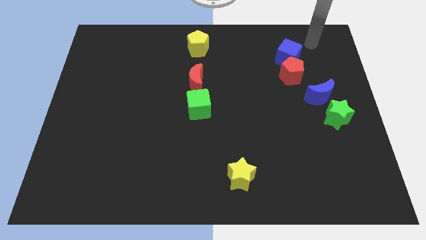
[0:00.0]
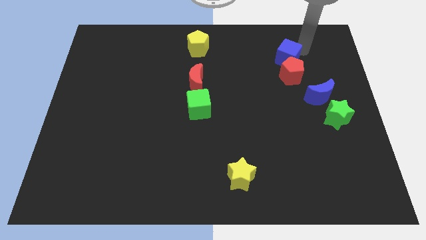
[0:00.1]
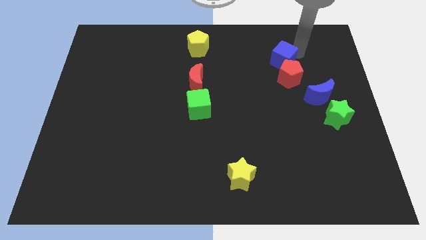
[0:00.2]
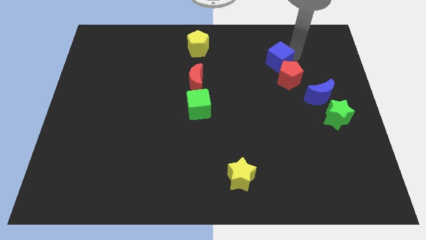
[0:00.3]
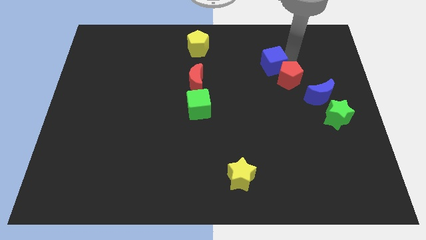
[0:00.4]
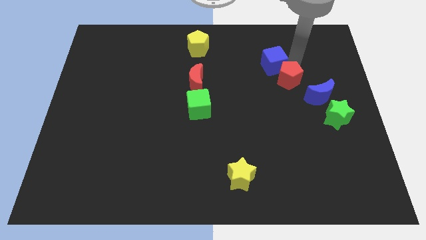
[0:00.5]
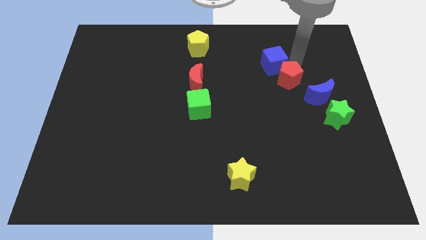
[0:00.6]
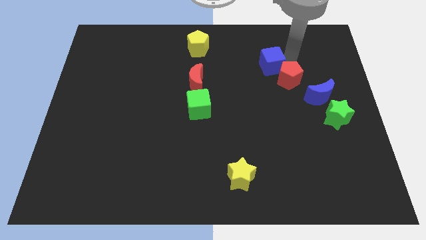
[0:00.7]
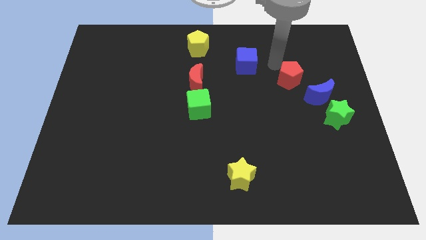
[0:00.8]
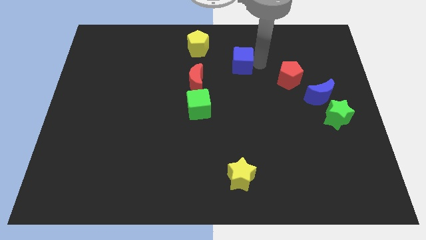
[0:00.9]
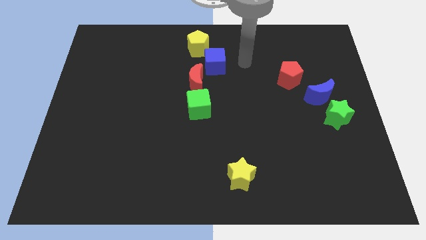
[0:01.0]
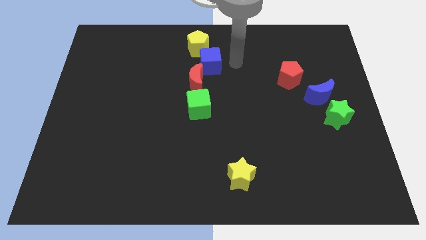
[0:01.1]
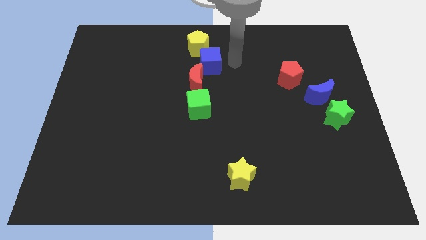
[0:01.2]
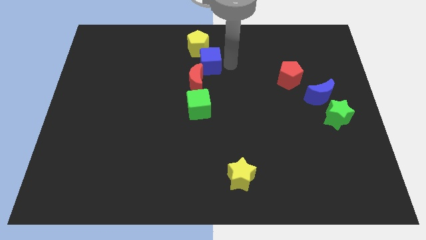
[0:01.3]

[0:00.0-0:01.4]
separate the blue cube from the red pentagon

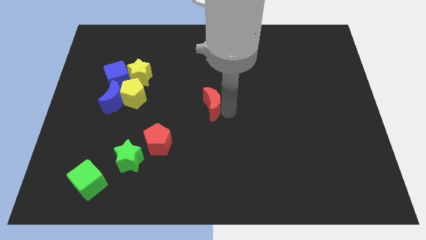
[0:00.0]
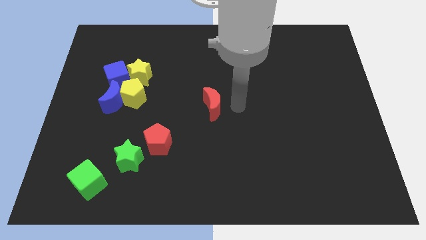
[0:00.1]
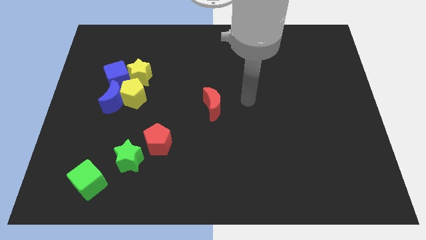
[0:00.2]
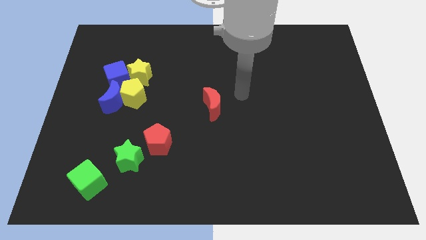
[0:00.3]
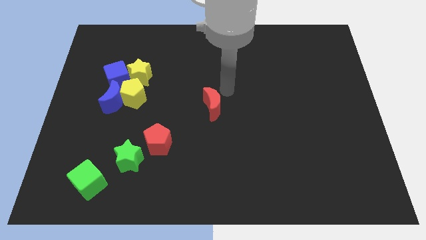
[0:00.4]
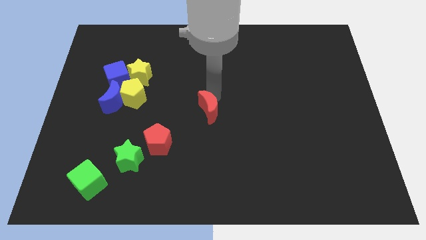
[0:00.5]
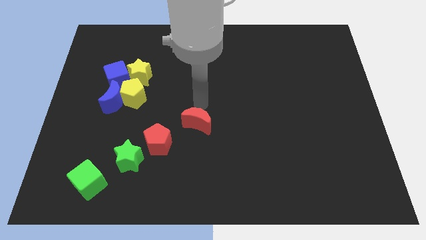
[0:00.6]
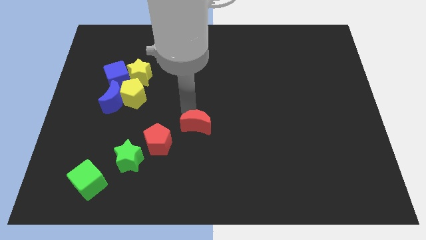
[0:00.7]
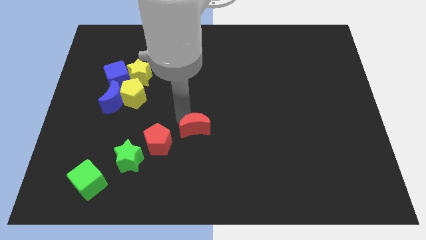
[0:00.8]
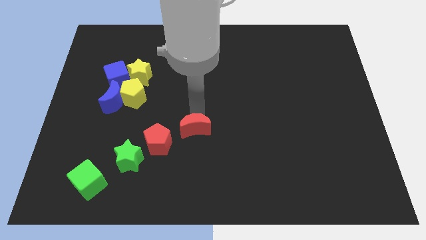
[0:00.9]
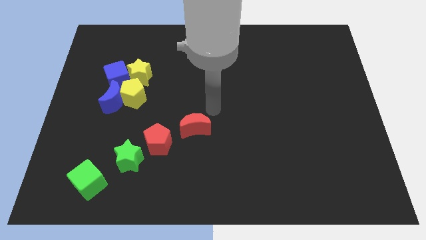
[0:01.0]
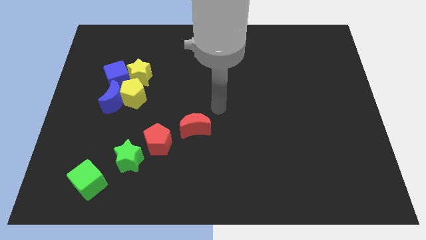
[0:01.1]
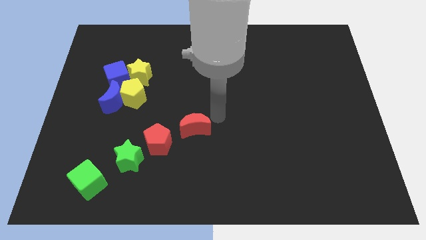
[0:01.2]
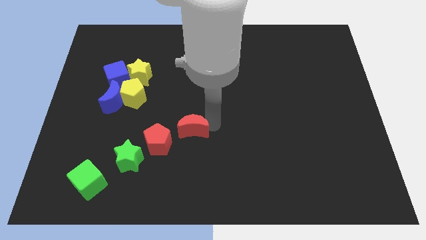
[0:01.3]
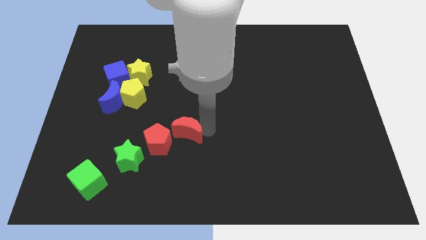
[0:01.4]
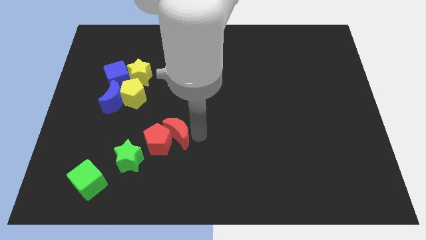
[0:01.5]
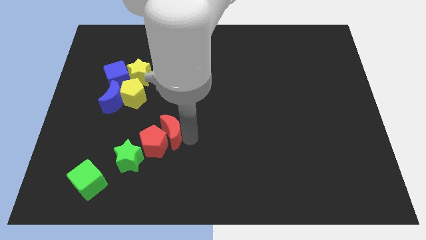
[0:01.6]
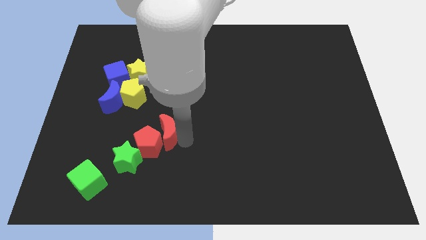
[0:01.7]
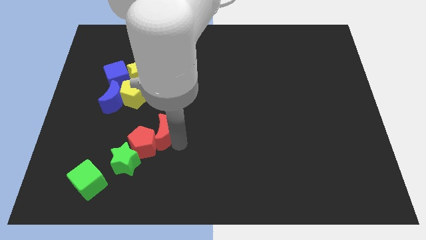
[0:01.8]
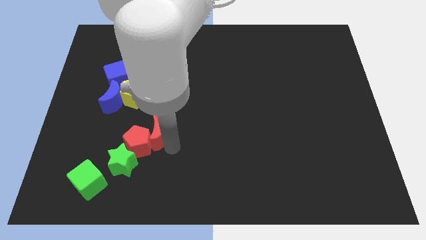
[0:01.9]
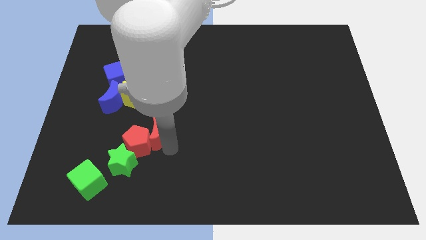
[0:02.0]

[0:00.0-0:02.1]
place the red crescent towards the right side of the red pentagon

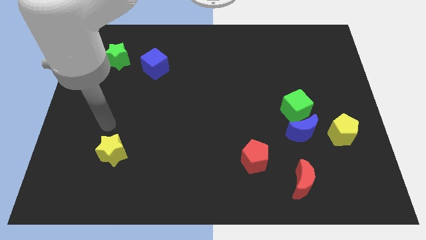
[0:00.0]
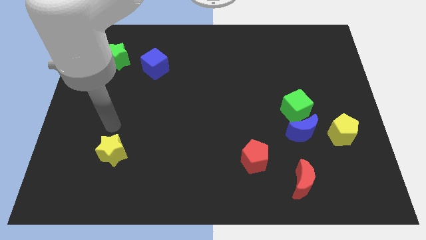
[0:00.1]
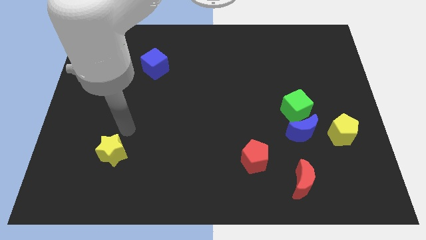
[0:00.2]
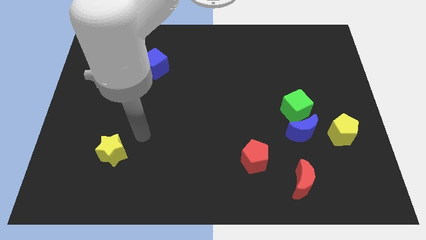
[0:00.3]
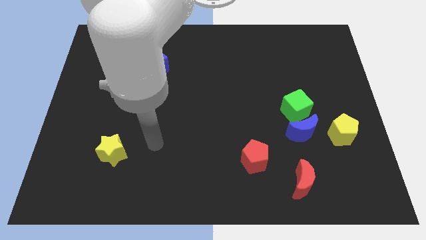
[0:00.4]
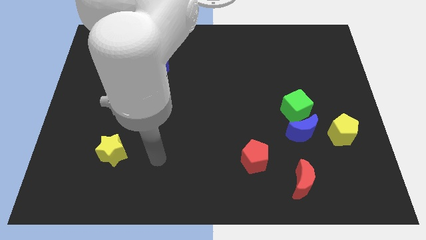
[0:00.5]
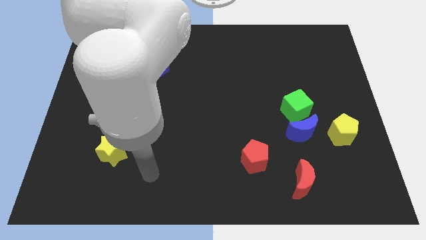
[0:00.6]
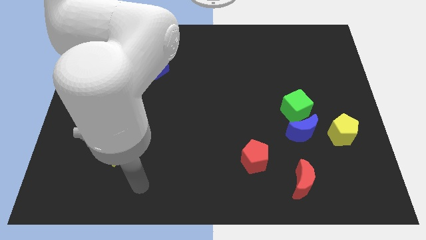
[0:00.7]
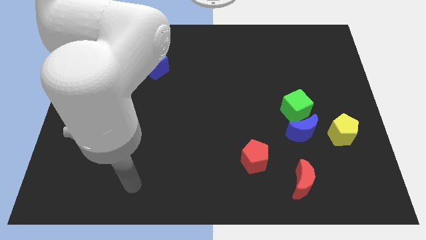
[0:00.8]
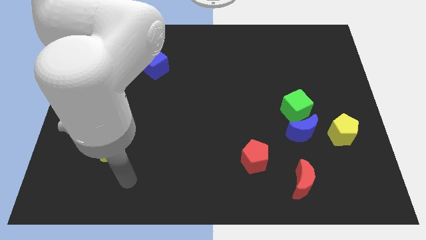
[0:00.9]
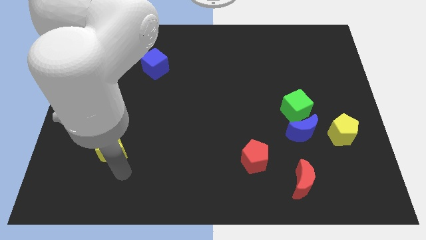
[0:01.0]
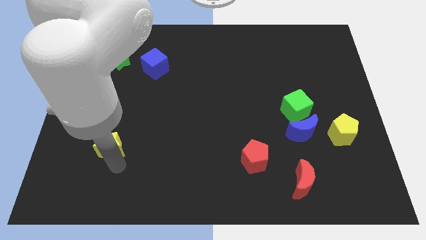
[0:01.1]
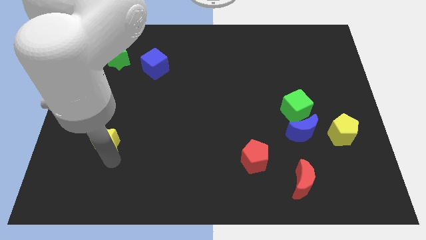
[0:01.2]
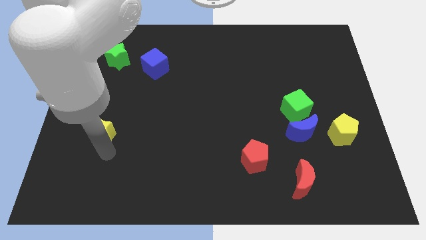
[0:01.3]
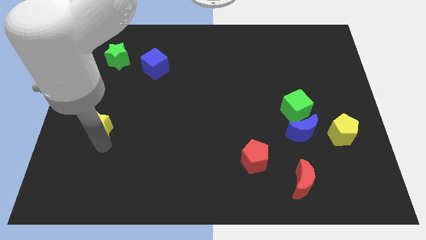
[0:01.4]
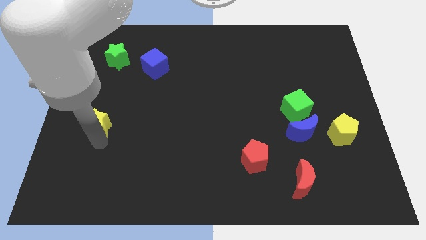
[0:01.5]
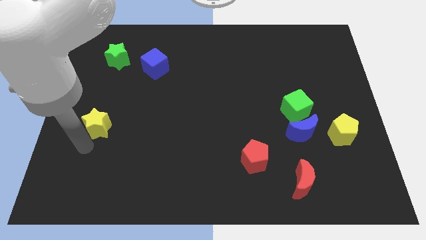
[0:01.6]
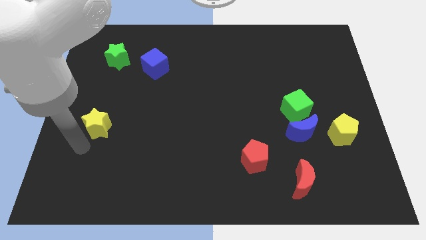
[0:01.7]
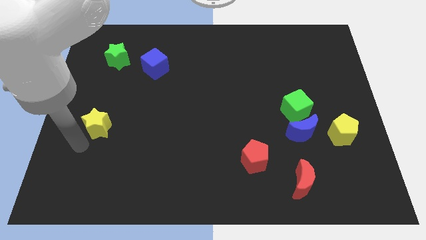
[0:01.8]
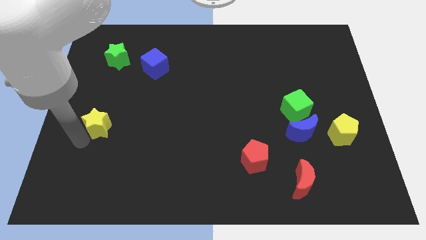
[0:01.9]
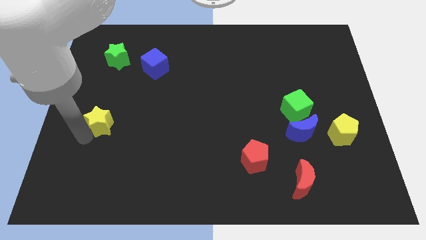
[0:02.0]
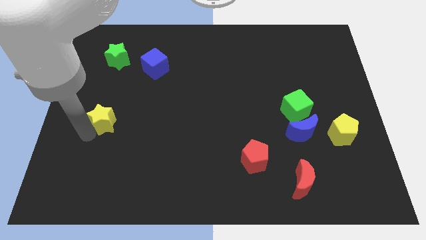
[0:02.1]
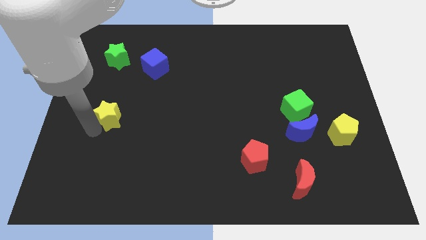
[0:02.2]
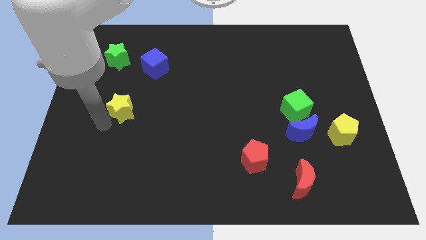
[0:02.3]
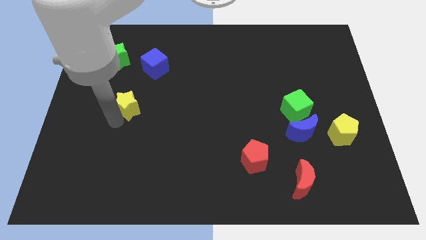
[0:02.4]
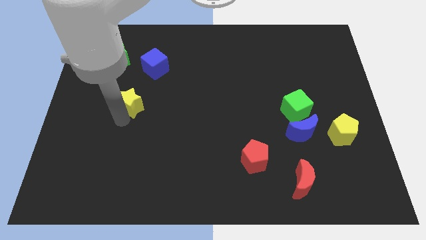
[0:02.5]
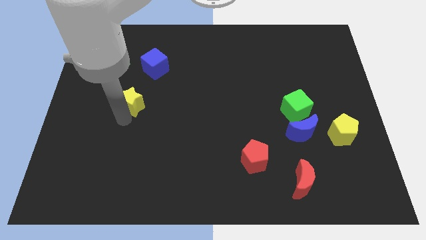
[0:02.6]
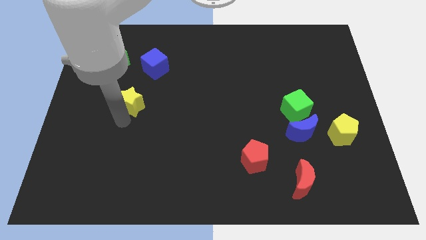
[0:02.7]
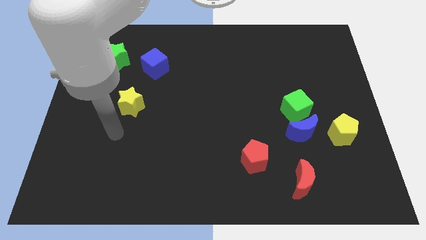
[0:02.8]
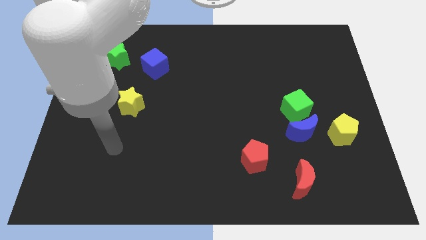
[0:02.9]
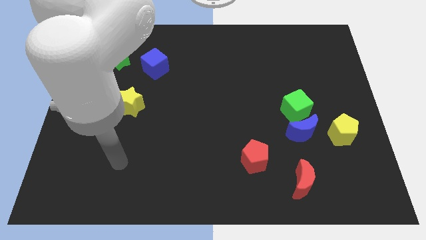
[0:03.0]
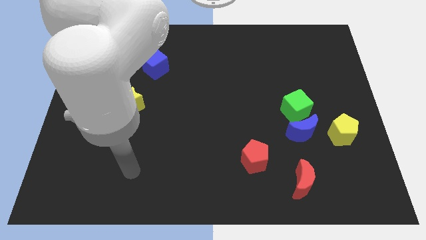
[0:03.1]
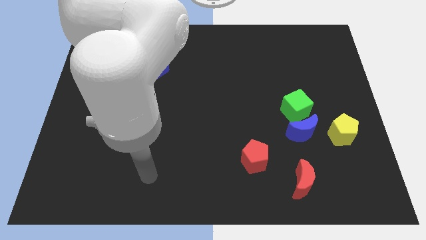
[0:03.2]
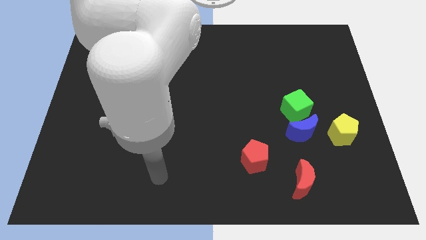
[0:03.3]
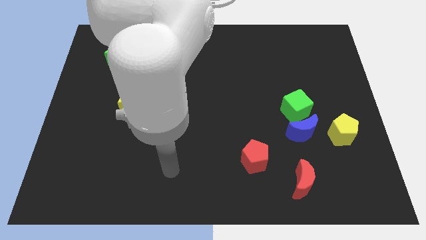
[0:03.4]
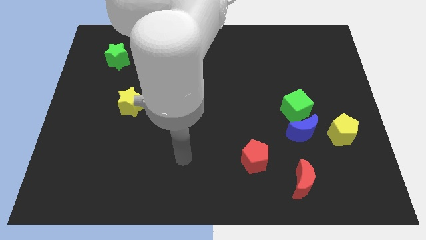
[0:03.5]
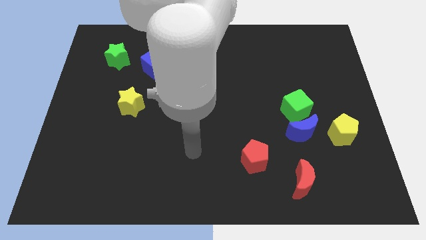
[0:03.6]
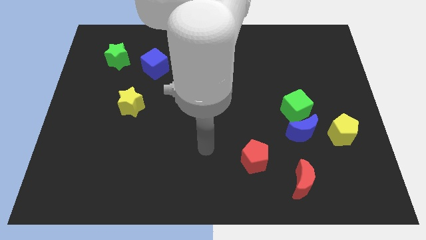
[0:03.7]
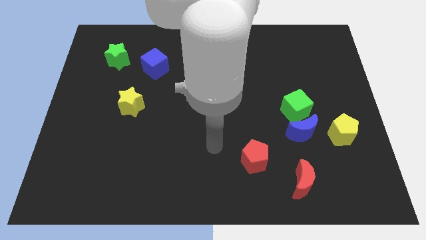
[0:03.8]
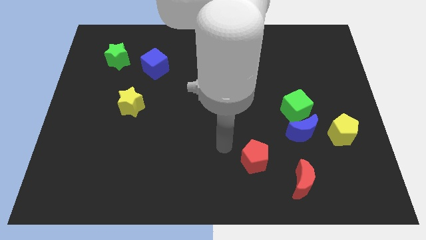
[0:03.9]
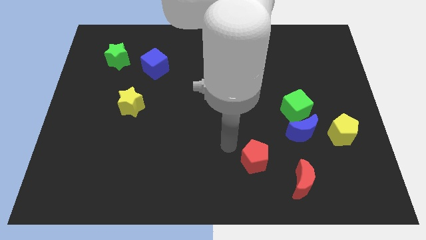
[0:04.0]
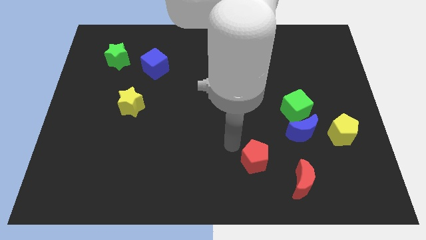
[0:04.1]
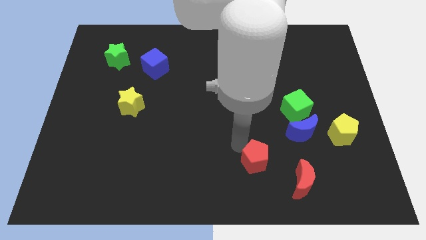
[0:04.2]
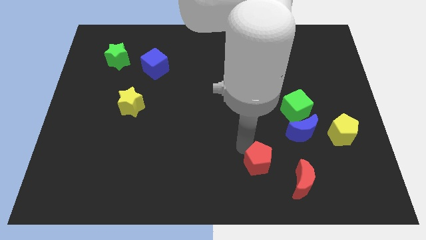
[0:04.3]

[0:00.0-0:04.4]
move the yellow star to the bottom left of the blue cube

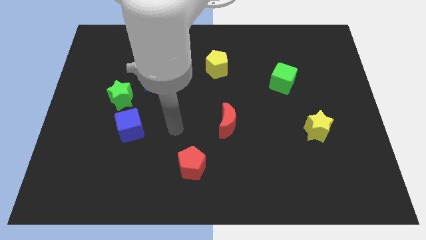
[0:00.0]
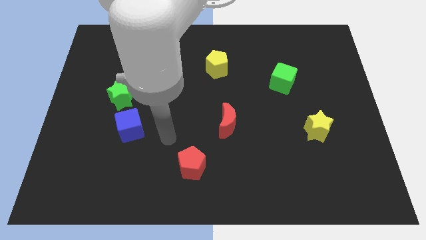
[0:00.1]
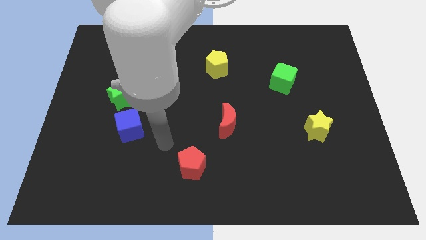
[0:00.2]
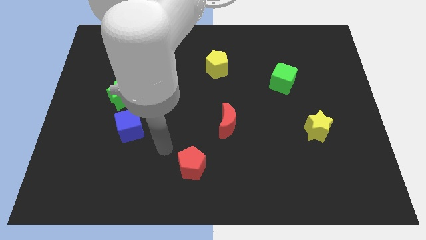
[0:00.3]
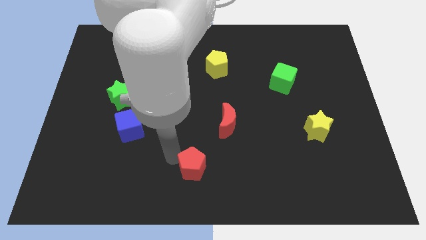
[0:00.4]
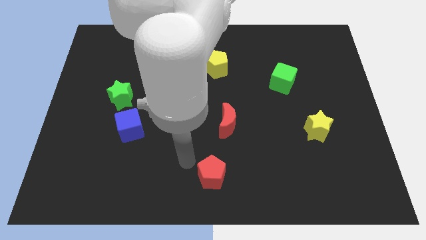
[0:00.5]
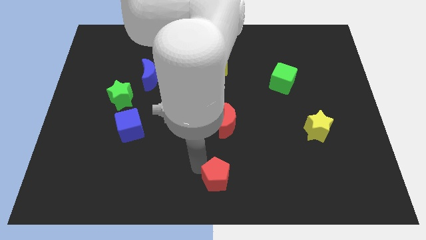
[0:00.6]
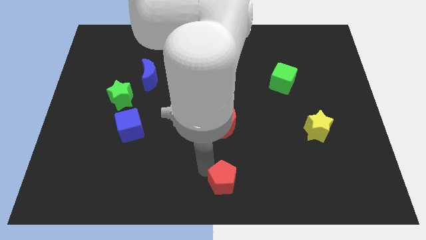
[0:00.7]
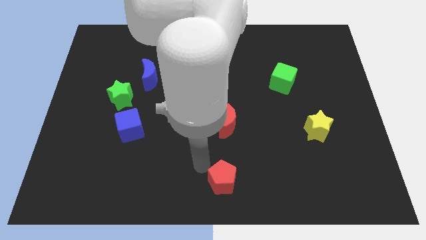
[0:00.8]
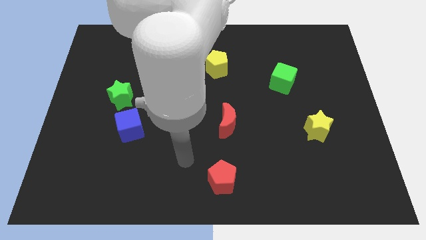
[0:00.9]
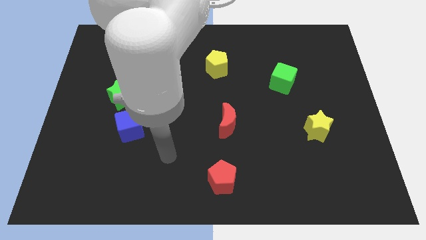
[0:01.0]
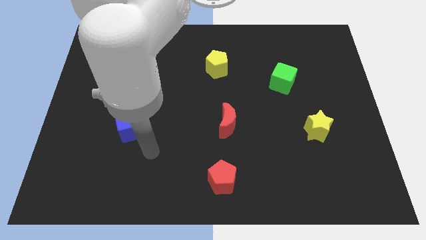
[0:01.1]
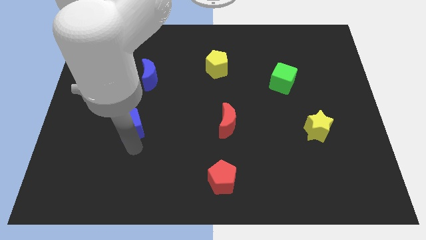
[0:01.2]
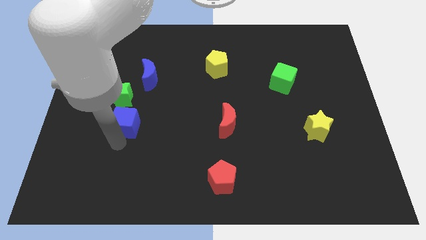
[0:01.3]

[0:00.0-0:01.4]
push the red pentagon parallel bottom to the red moon
